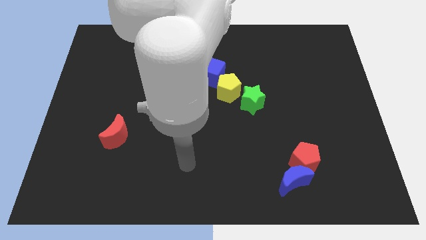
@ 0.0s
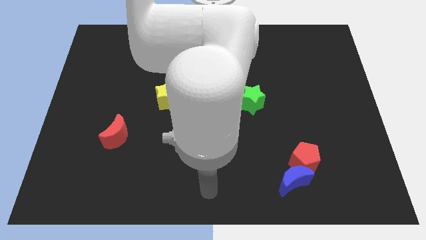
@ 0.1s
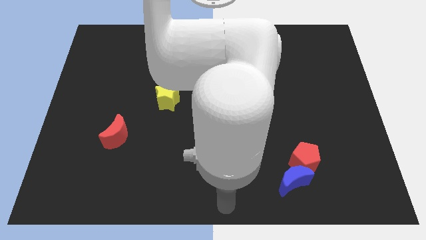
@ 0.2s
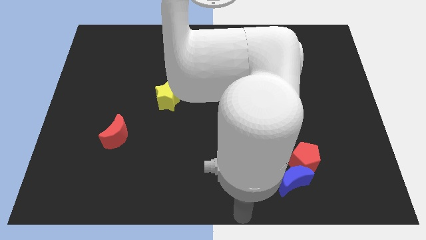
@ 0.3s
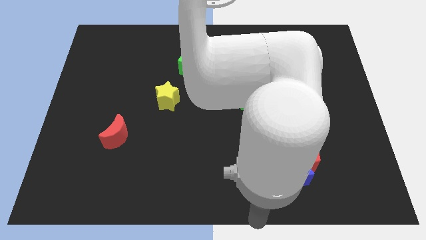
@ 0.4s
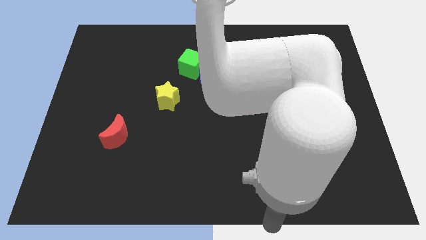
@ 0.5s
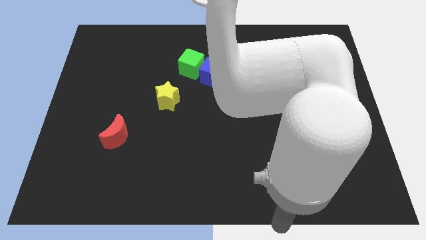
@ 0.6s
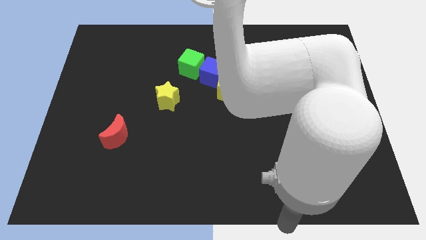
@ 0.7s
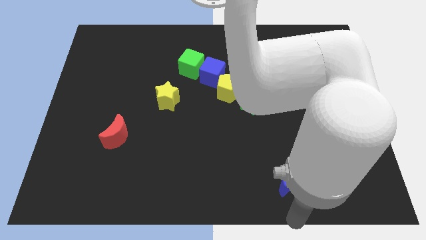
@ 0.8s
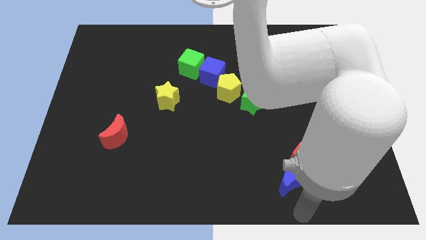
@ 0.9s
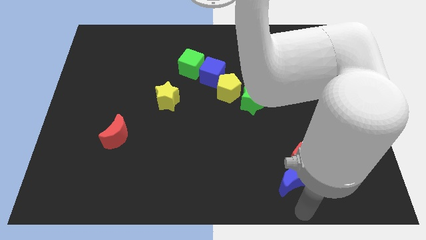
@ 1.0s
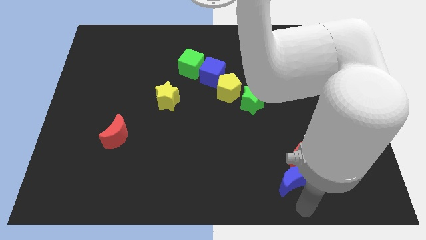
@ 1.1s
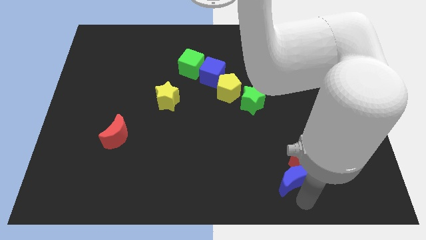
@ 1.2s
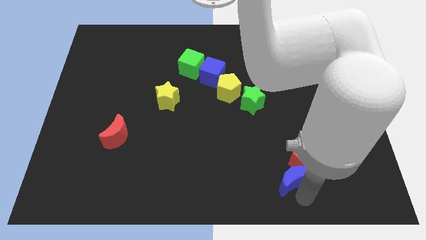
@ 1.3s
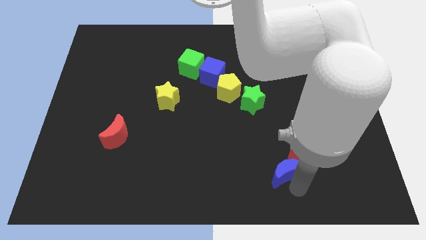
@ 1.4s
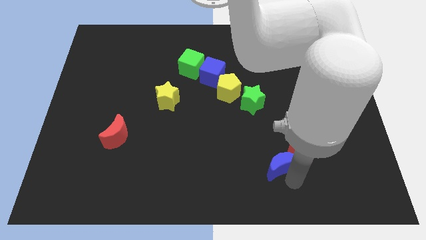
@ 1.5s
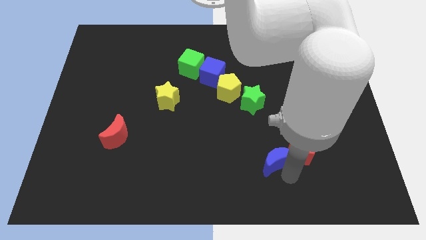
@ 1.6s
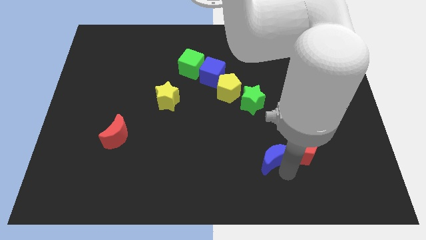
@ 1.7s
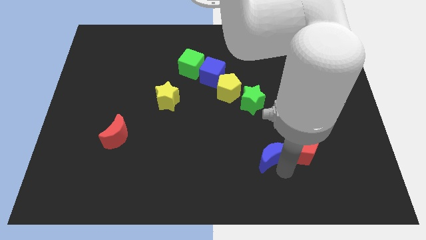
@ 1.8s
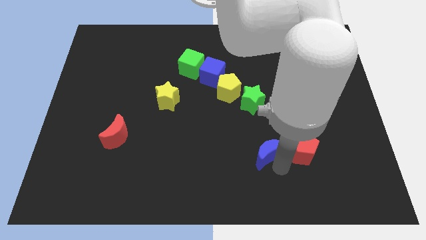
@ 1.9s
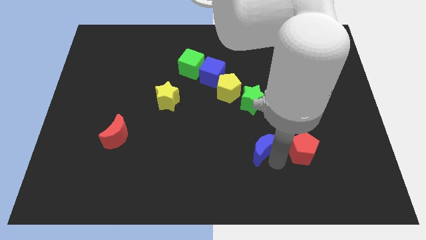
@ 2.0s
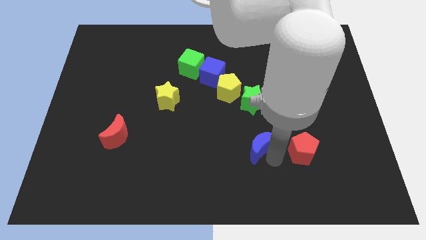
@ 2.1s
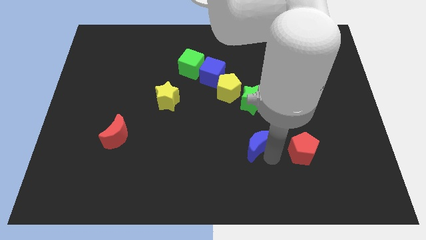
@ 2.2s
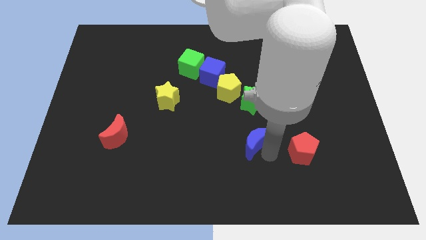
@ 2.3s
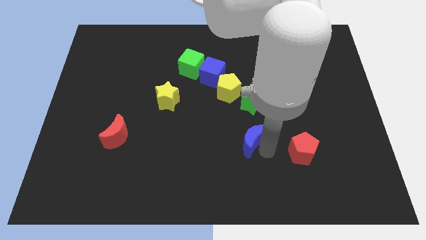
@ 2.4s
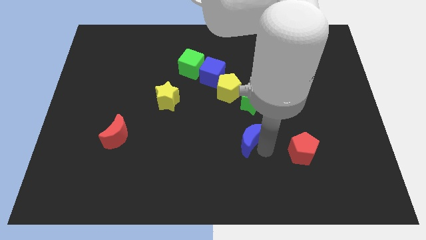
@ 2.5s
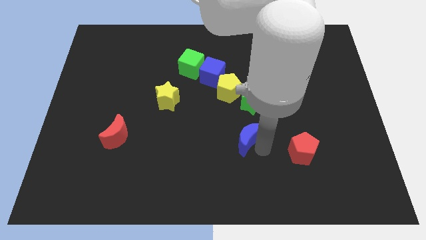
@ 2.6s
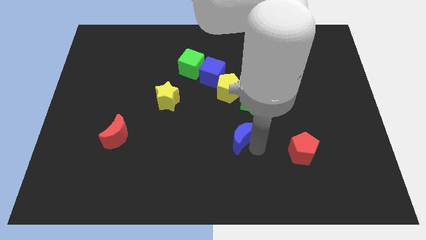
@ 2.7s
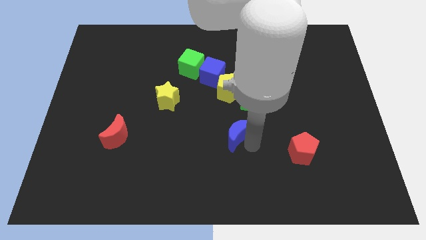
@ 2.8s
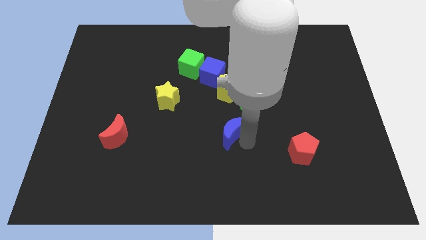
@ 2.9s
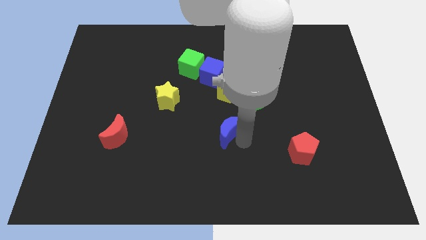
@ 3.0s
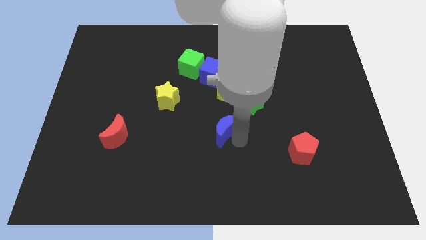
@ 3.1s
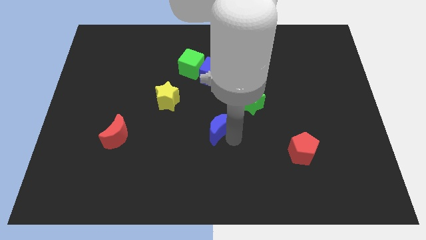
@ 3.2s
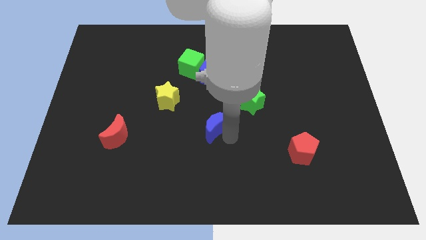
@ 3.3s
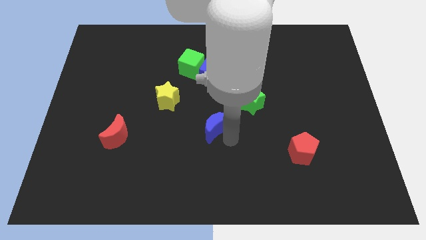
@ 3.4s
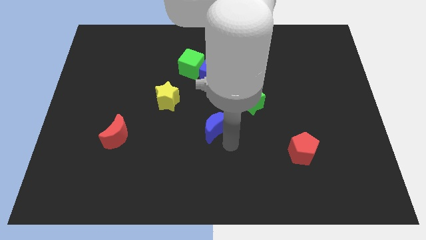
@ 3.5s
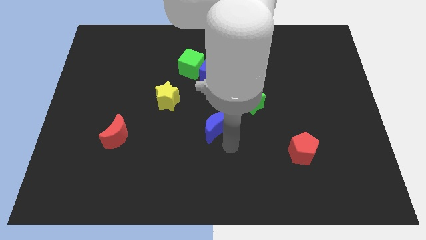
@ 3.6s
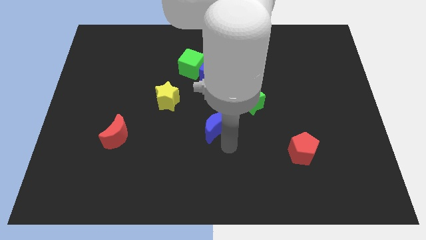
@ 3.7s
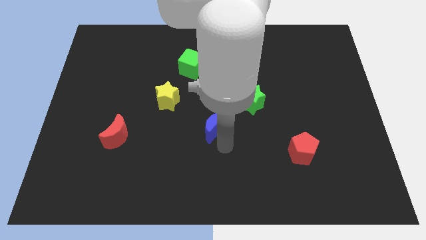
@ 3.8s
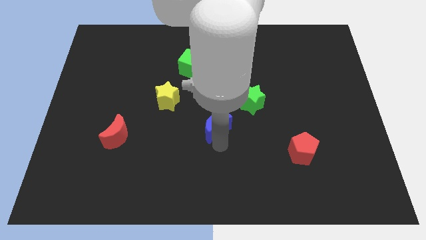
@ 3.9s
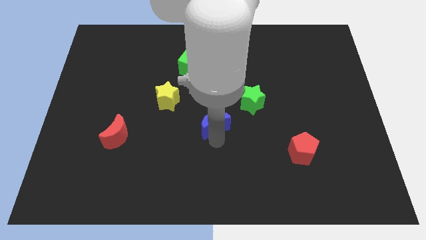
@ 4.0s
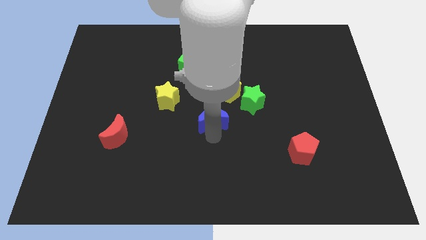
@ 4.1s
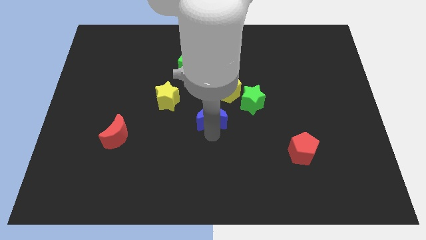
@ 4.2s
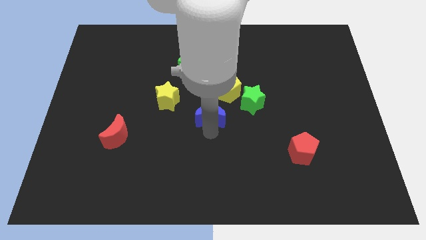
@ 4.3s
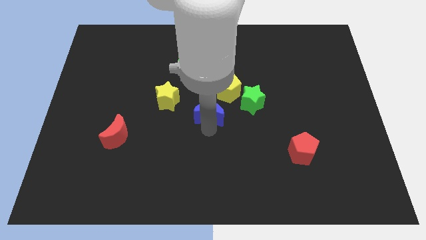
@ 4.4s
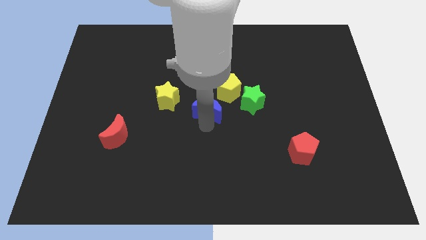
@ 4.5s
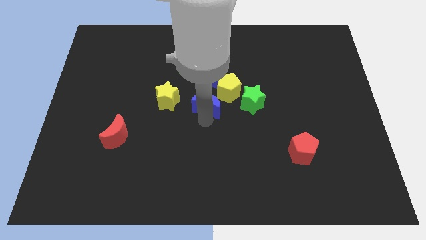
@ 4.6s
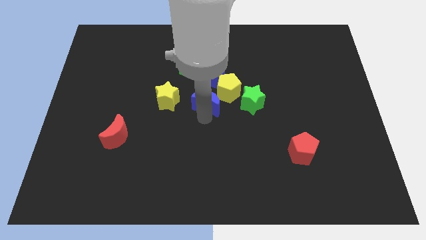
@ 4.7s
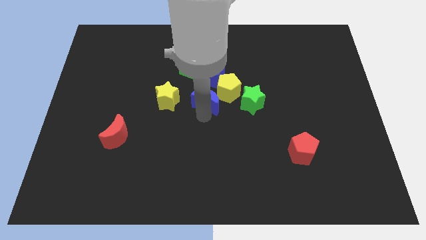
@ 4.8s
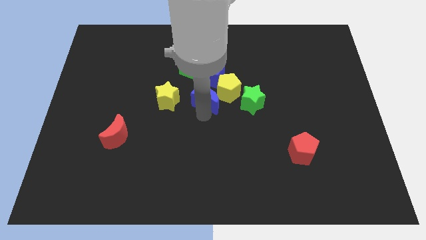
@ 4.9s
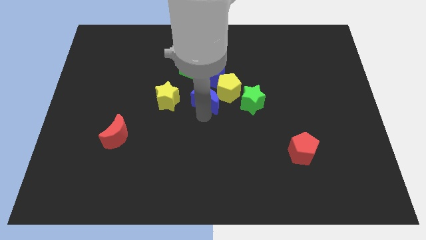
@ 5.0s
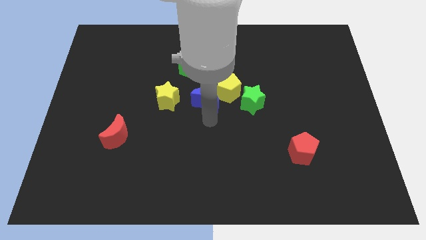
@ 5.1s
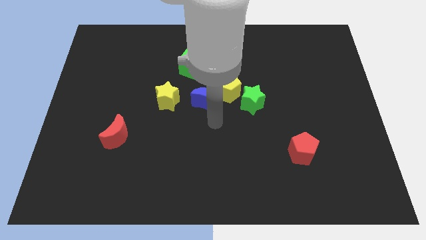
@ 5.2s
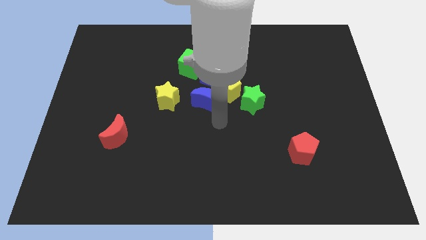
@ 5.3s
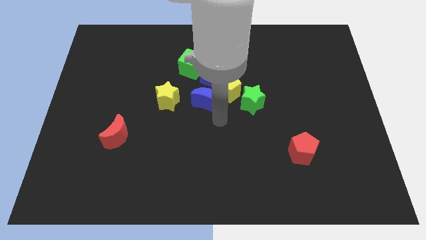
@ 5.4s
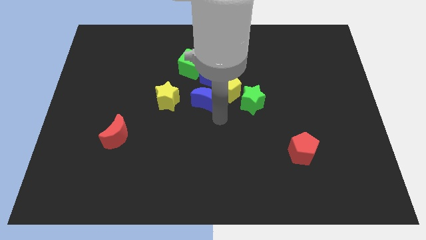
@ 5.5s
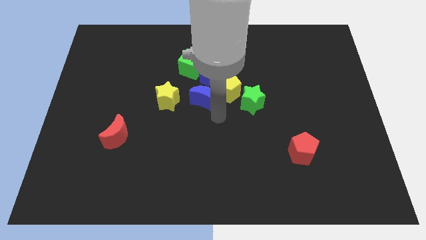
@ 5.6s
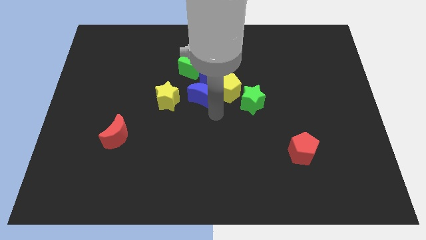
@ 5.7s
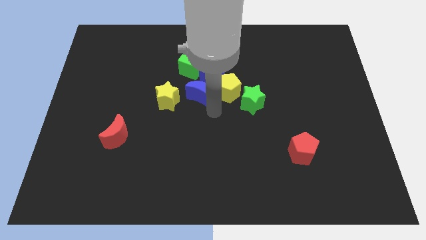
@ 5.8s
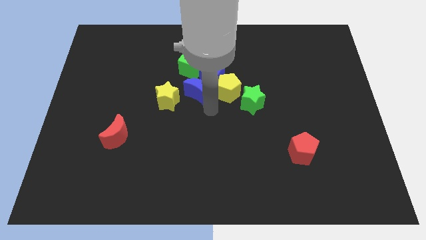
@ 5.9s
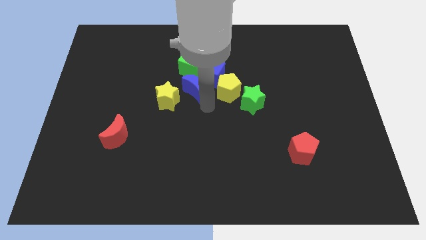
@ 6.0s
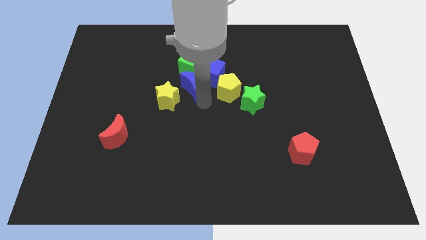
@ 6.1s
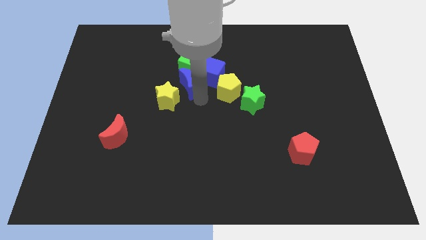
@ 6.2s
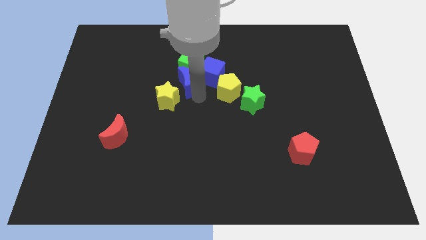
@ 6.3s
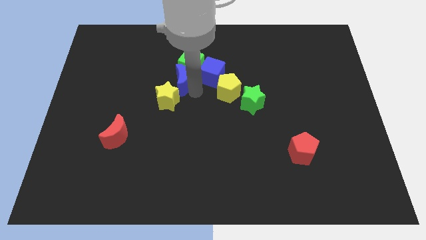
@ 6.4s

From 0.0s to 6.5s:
push the blue moon close to the green cube

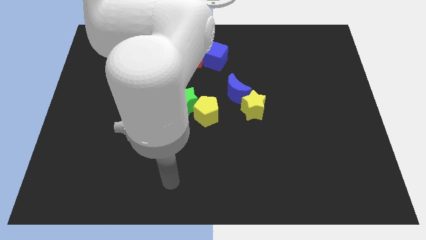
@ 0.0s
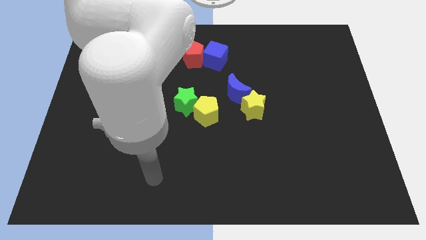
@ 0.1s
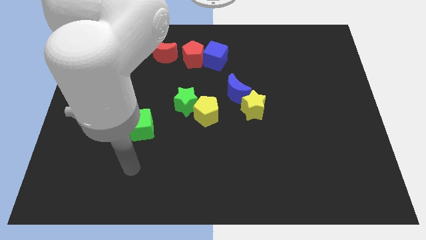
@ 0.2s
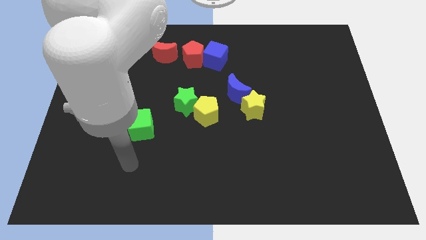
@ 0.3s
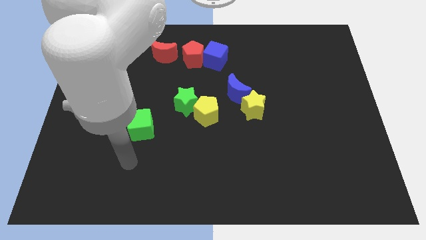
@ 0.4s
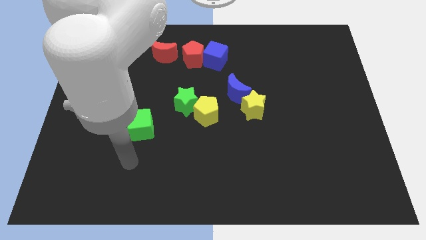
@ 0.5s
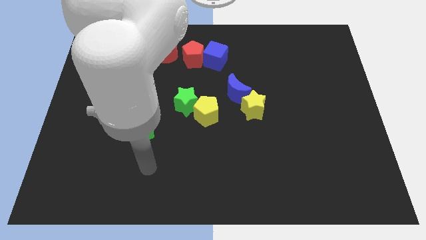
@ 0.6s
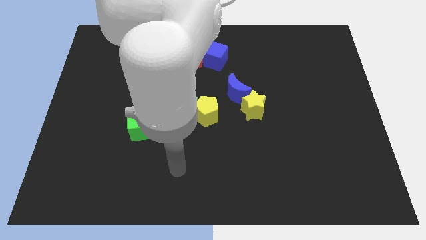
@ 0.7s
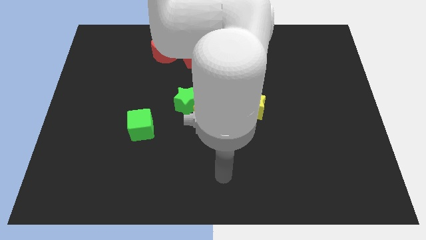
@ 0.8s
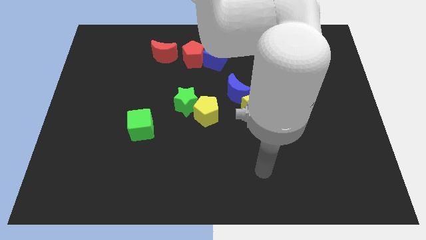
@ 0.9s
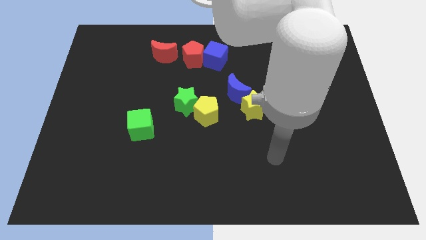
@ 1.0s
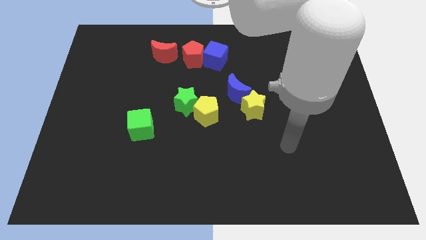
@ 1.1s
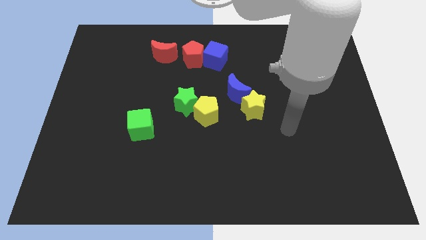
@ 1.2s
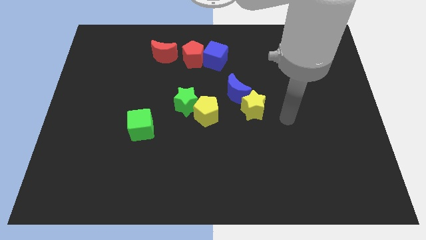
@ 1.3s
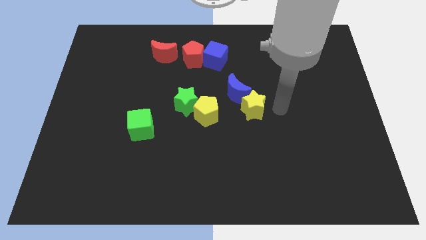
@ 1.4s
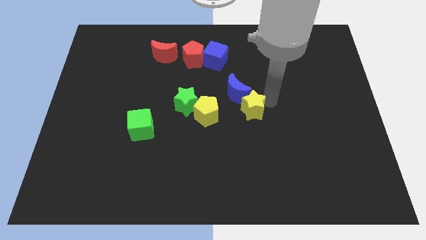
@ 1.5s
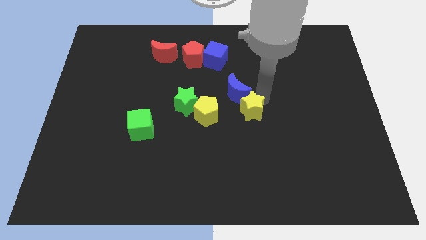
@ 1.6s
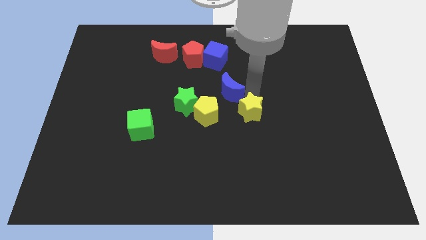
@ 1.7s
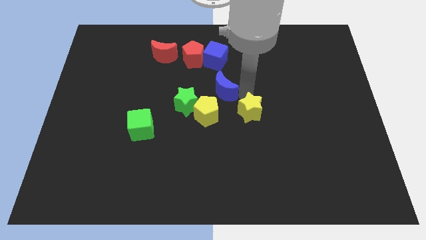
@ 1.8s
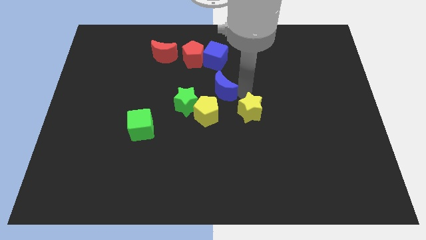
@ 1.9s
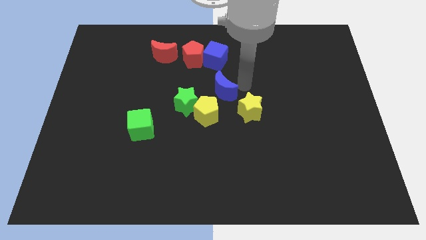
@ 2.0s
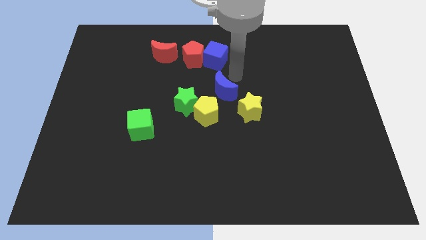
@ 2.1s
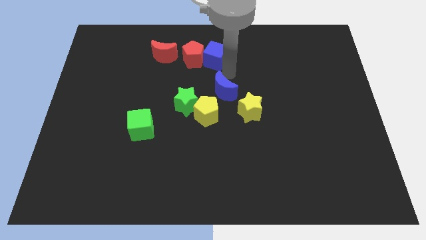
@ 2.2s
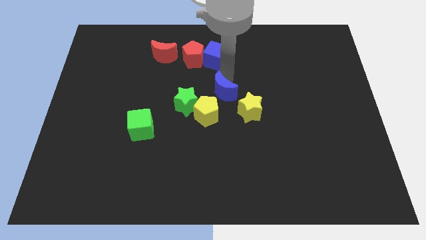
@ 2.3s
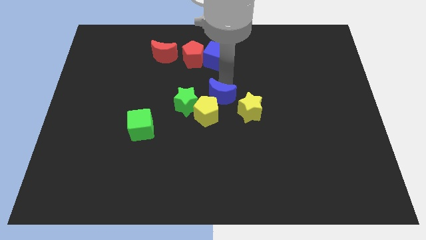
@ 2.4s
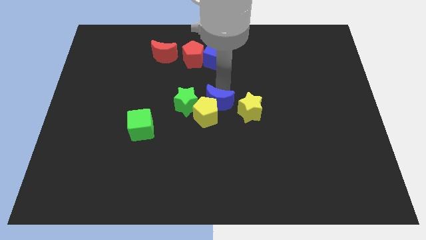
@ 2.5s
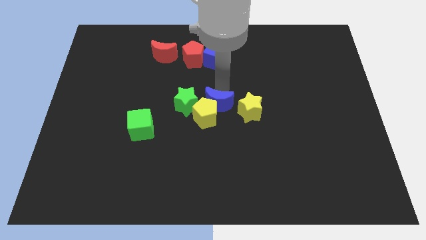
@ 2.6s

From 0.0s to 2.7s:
move the blue moon to the yellow pentagon
